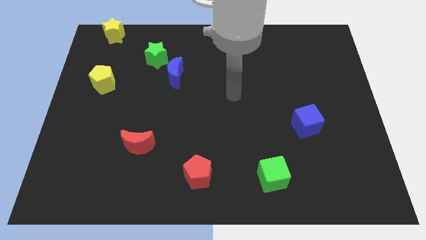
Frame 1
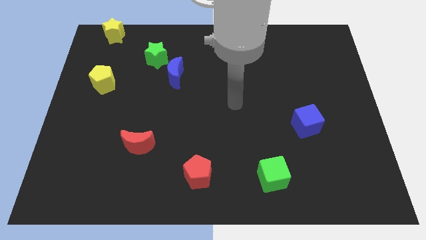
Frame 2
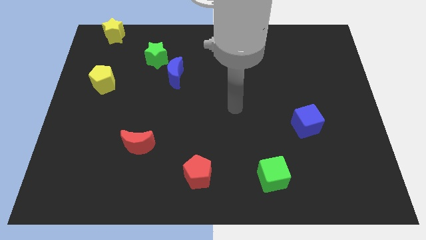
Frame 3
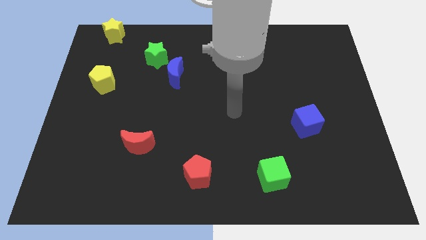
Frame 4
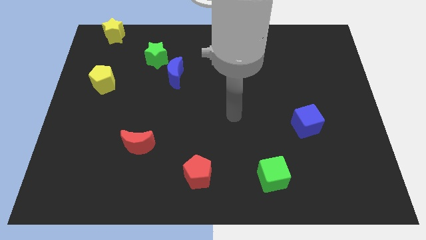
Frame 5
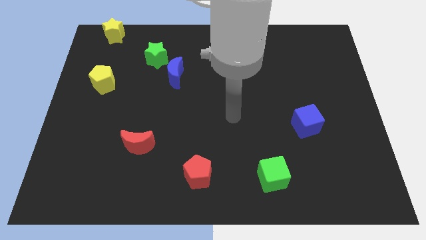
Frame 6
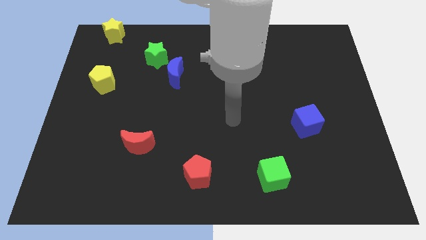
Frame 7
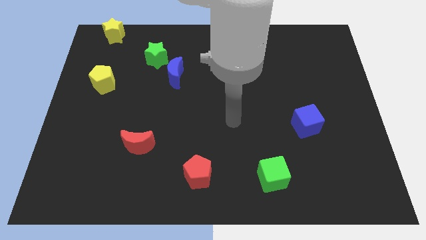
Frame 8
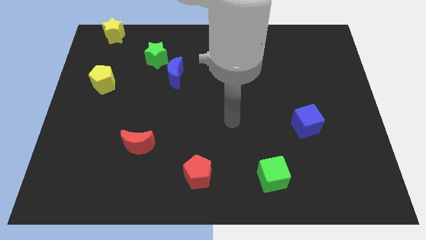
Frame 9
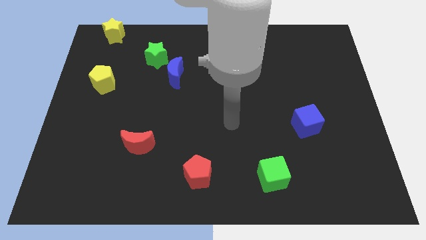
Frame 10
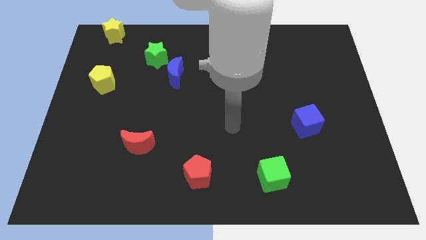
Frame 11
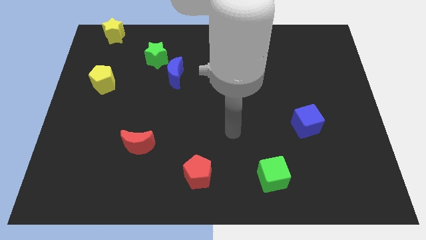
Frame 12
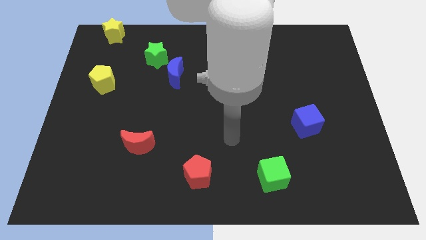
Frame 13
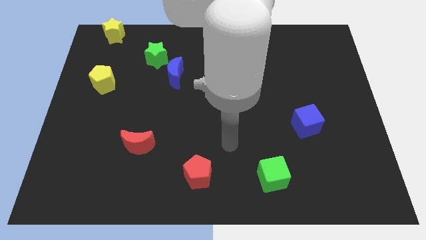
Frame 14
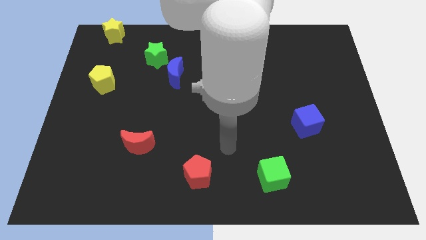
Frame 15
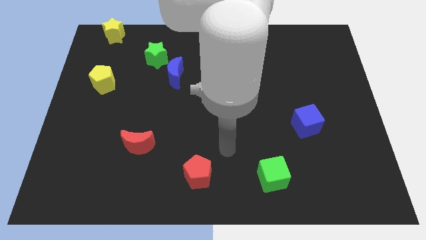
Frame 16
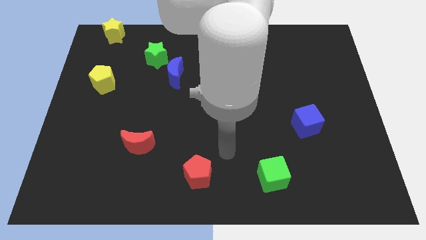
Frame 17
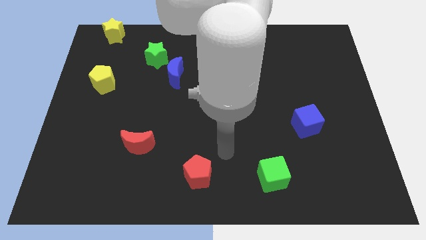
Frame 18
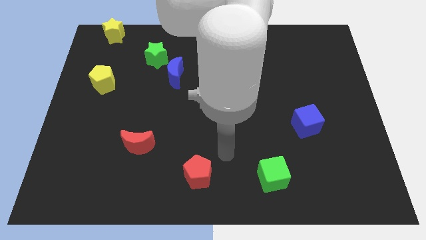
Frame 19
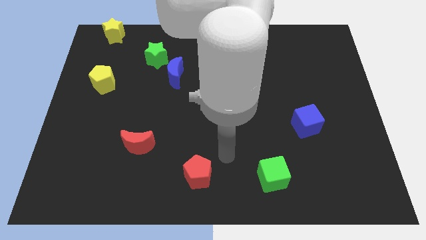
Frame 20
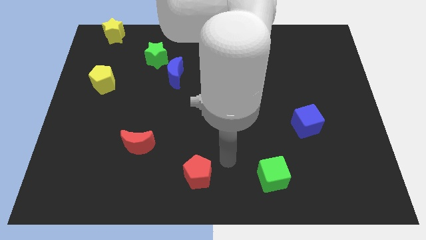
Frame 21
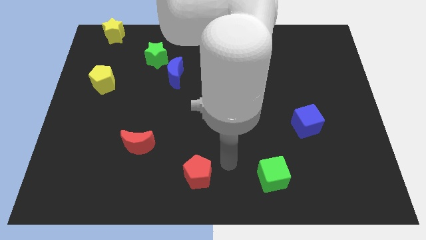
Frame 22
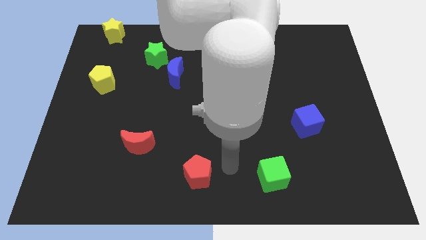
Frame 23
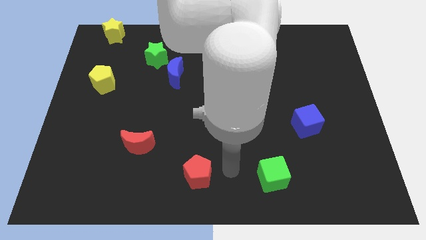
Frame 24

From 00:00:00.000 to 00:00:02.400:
move your arm close to the red pentagon

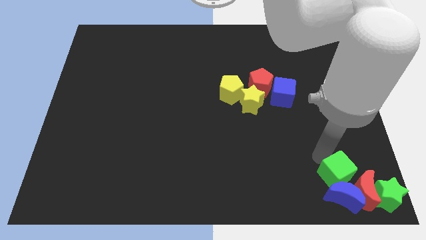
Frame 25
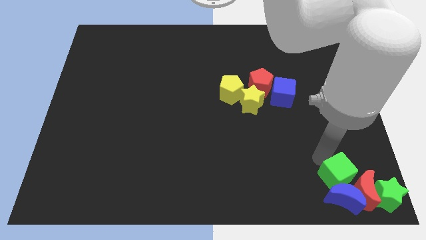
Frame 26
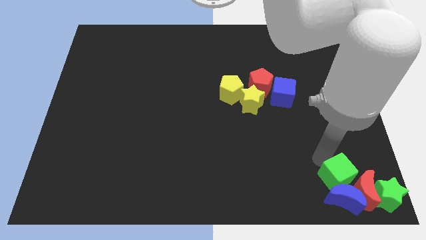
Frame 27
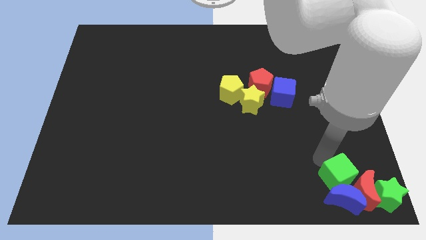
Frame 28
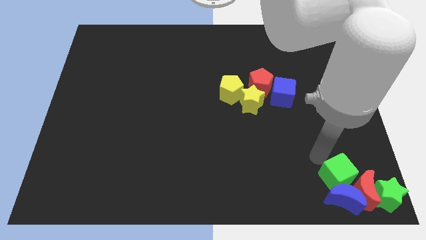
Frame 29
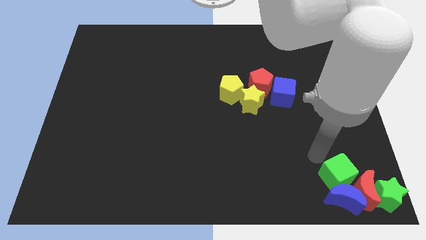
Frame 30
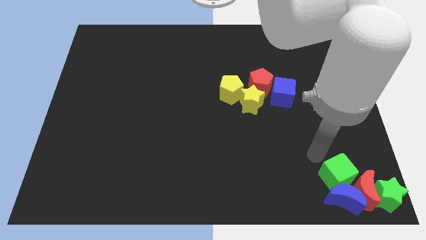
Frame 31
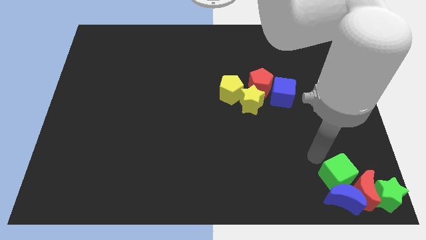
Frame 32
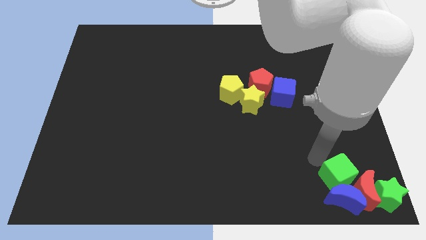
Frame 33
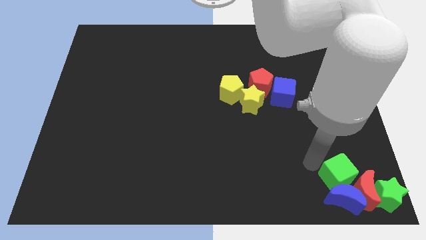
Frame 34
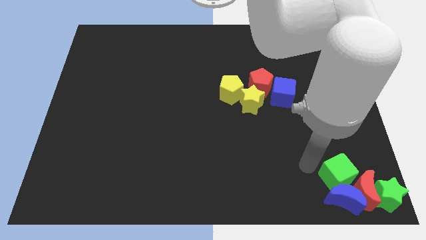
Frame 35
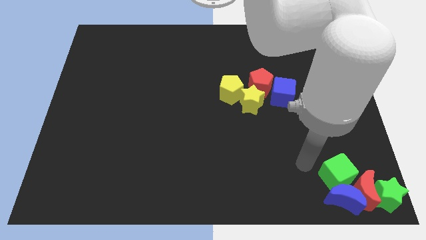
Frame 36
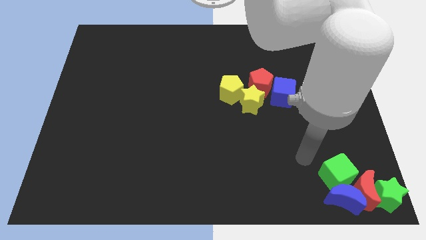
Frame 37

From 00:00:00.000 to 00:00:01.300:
push green cube in to blue crescent

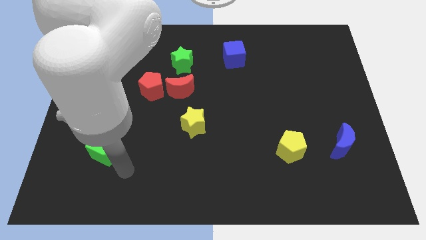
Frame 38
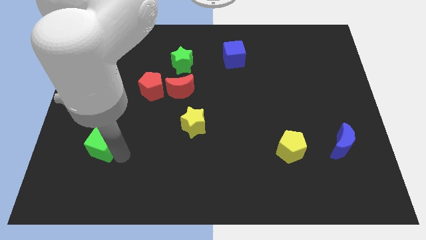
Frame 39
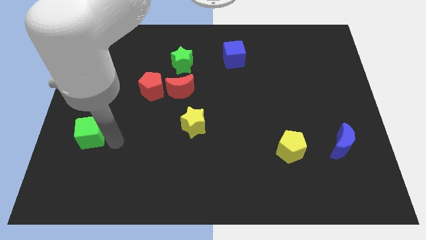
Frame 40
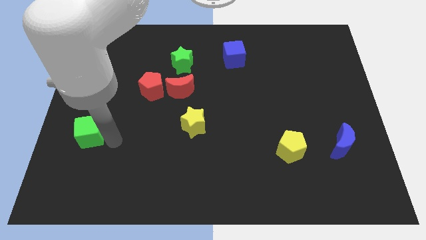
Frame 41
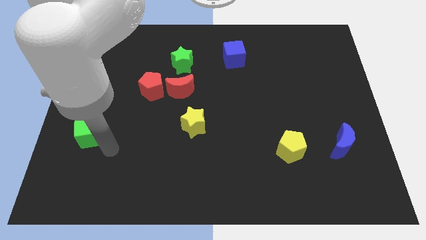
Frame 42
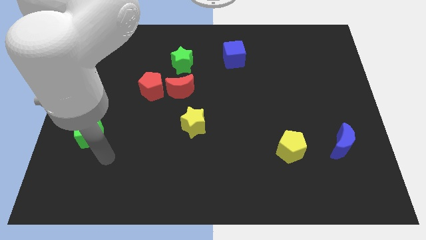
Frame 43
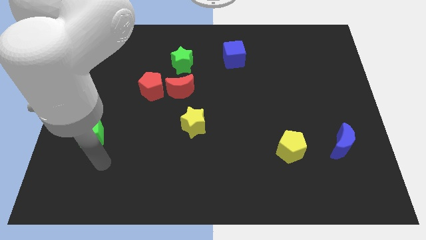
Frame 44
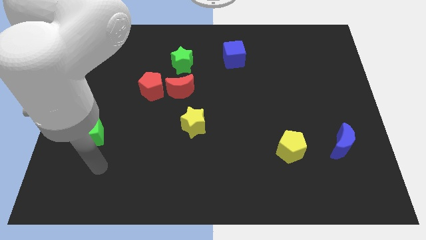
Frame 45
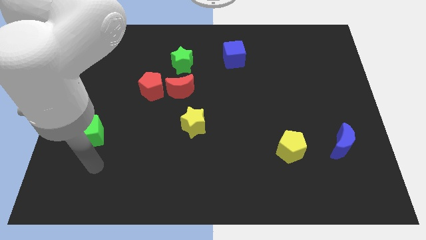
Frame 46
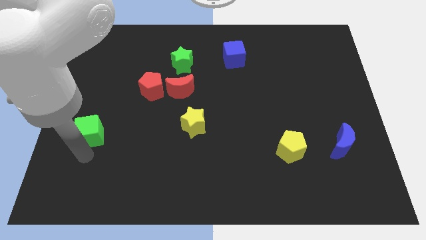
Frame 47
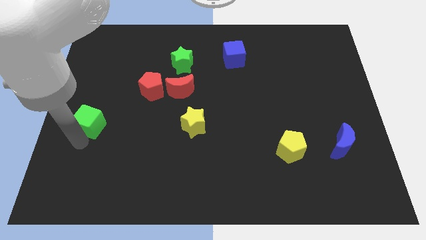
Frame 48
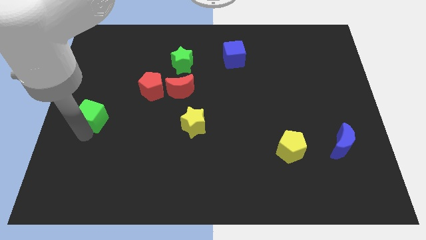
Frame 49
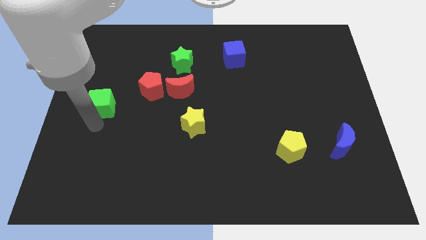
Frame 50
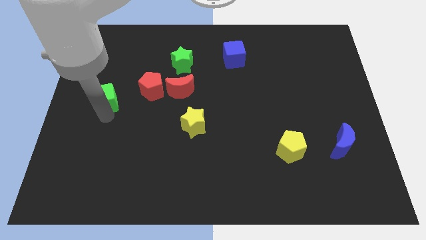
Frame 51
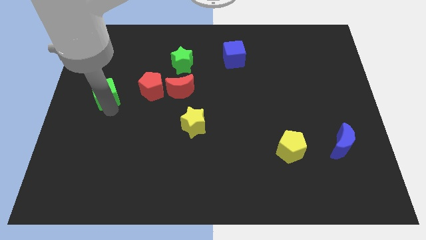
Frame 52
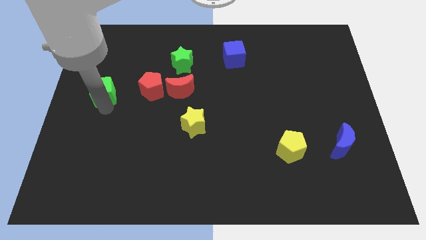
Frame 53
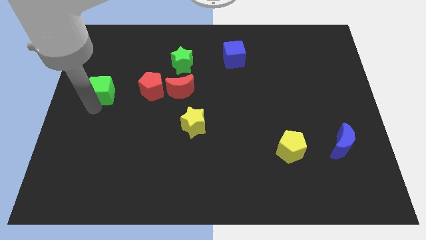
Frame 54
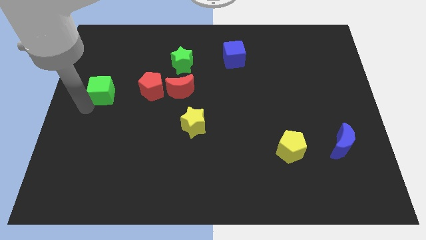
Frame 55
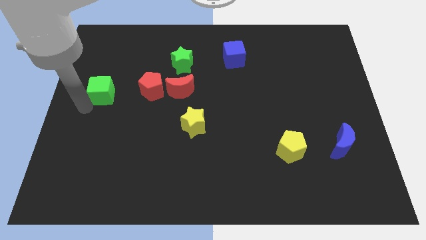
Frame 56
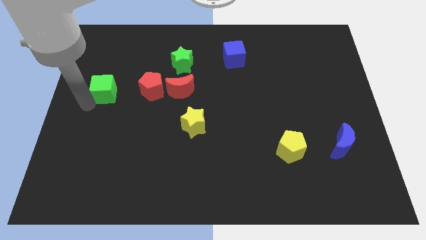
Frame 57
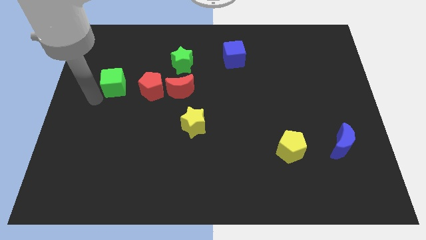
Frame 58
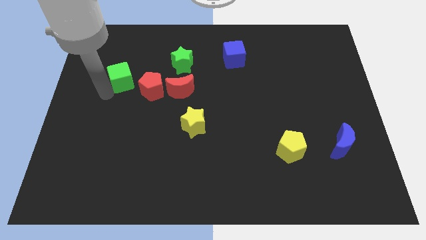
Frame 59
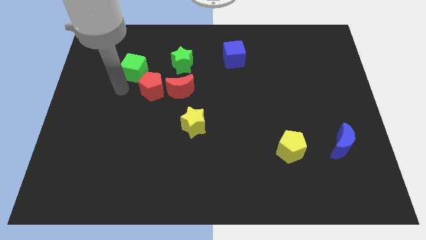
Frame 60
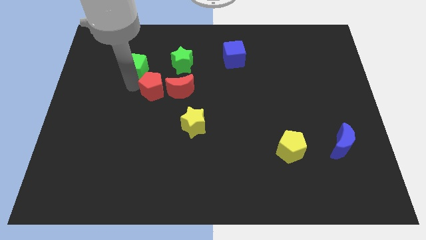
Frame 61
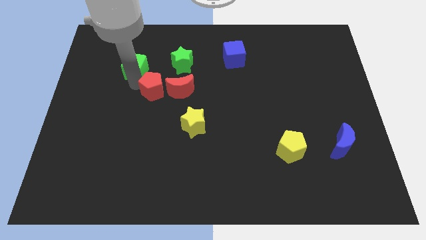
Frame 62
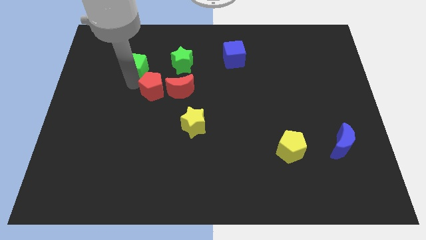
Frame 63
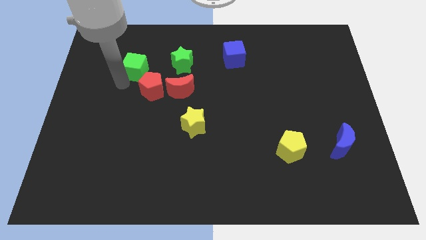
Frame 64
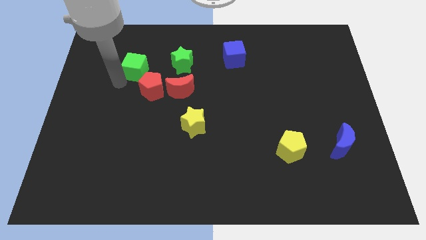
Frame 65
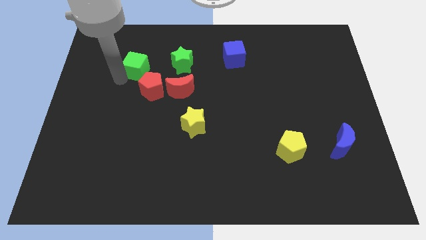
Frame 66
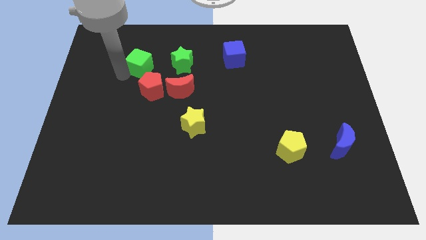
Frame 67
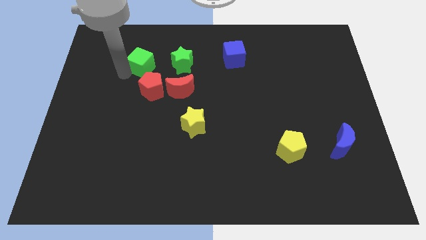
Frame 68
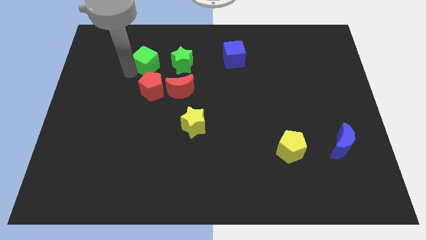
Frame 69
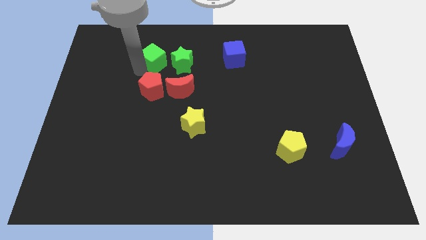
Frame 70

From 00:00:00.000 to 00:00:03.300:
place the green cube above the red pentagon

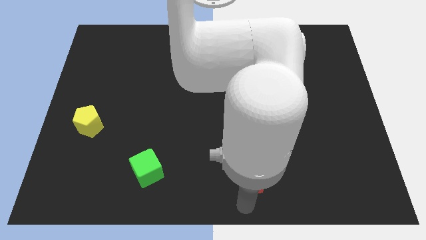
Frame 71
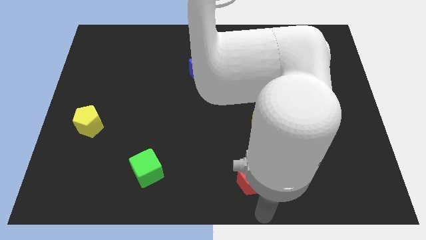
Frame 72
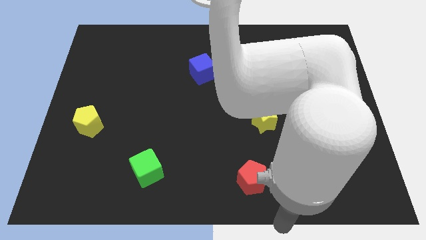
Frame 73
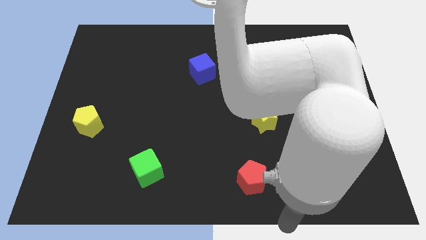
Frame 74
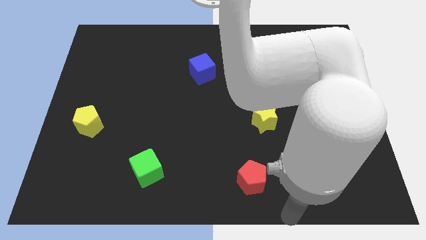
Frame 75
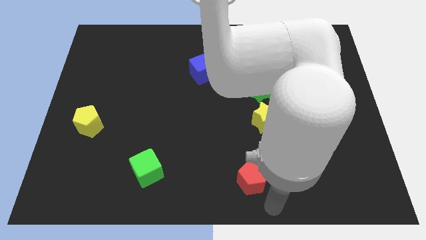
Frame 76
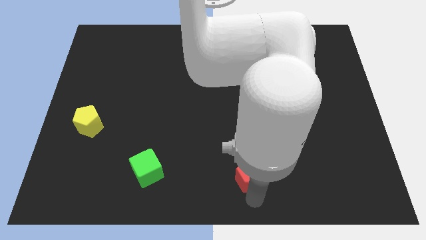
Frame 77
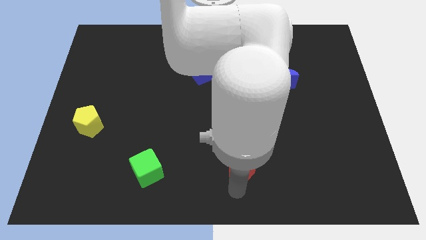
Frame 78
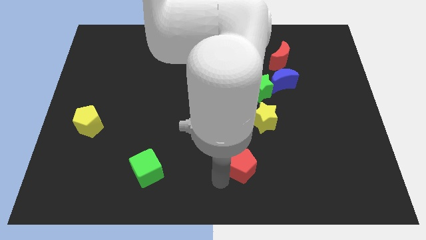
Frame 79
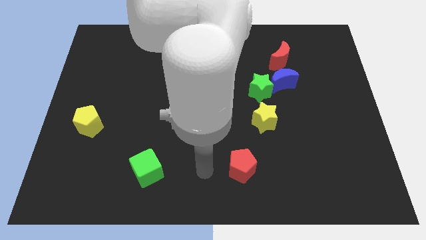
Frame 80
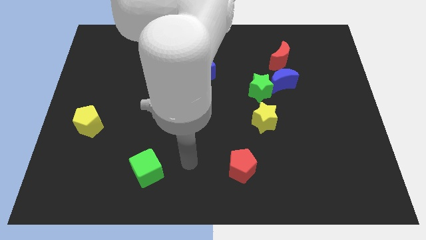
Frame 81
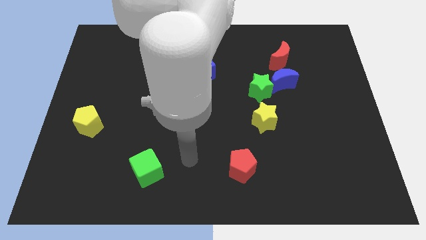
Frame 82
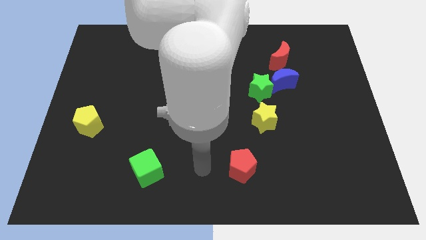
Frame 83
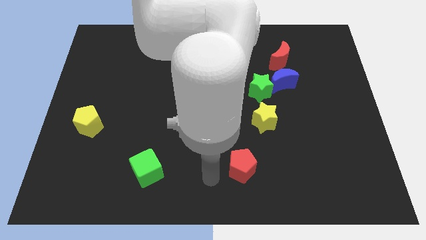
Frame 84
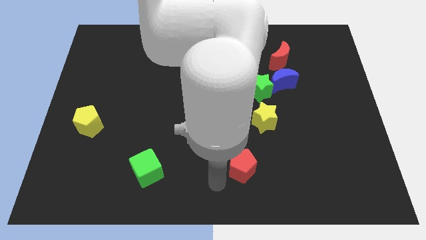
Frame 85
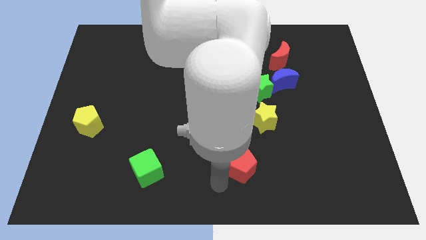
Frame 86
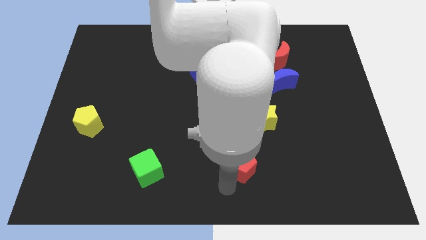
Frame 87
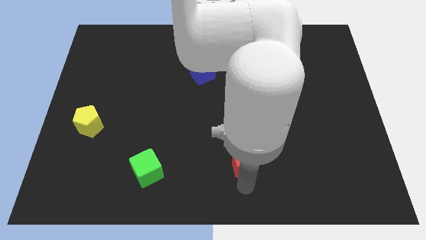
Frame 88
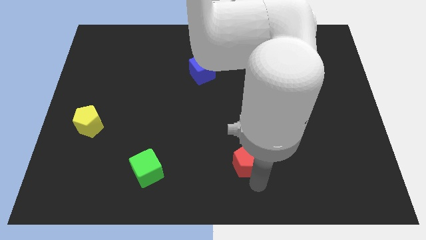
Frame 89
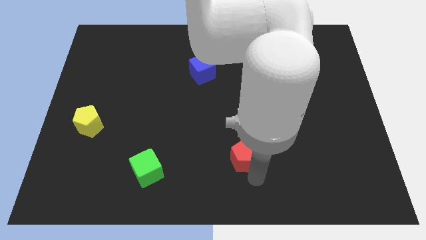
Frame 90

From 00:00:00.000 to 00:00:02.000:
touch the red pentagon with your arm
